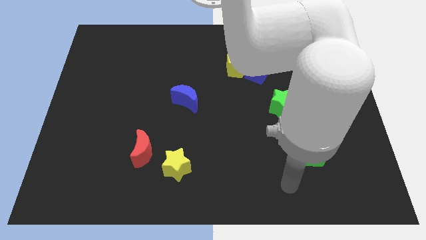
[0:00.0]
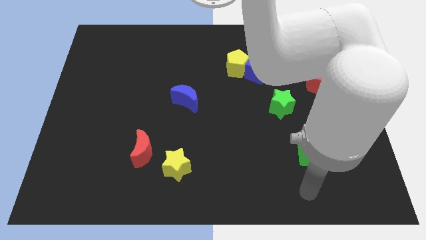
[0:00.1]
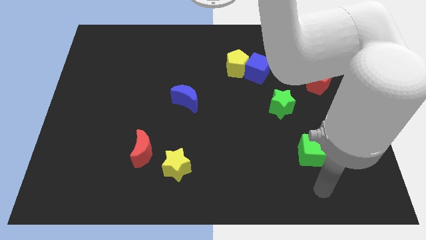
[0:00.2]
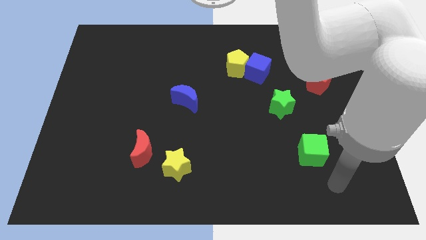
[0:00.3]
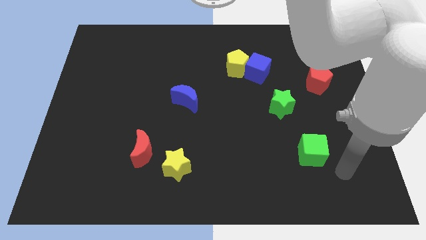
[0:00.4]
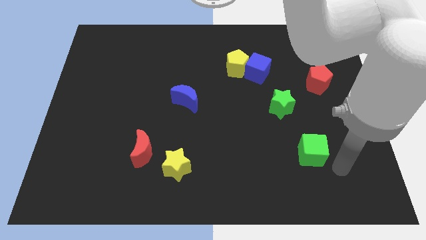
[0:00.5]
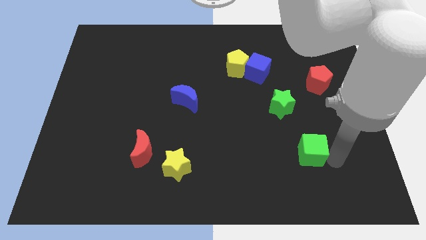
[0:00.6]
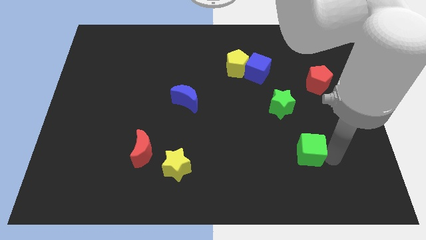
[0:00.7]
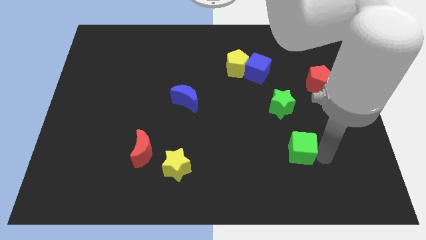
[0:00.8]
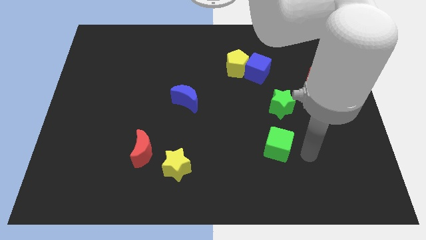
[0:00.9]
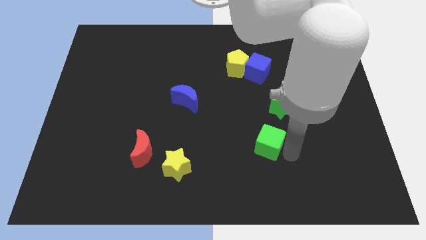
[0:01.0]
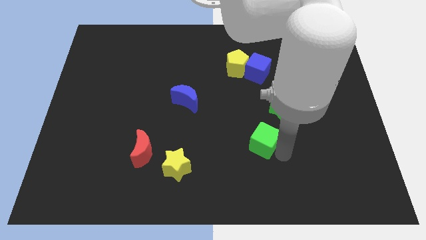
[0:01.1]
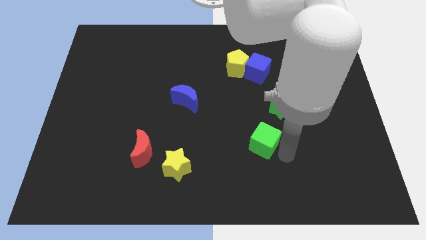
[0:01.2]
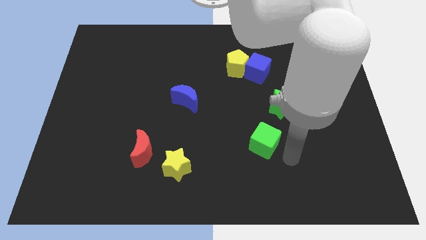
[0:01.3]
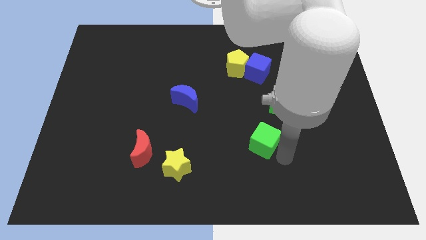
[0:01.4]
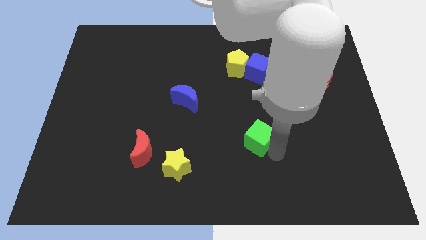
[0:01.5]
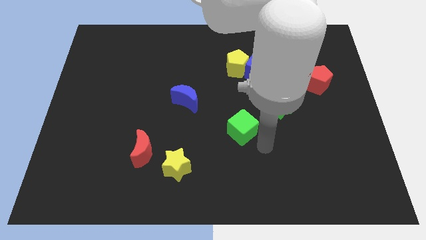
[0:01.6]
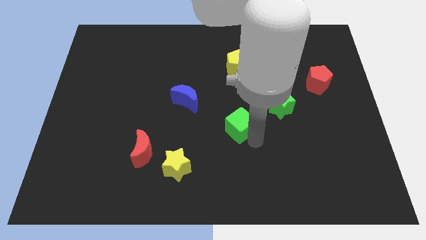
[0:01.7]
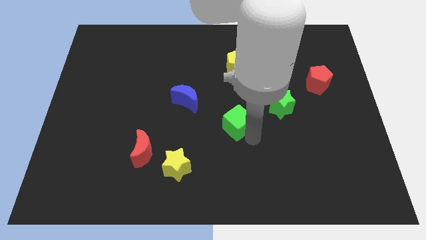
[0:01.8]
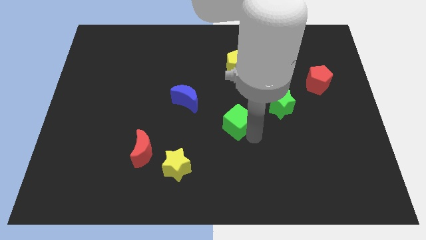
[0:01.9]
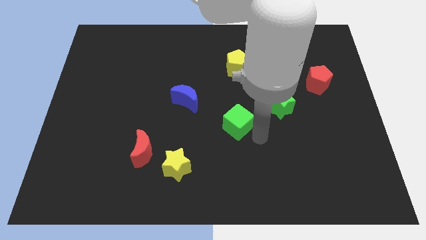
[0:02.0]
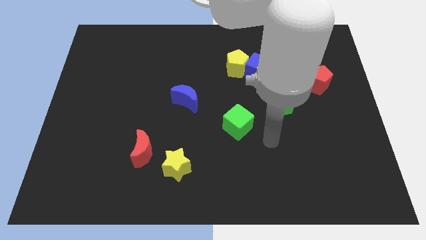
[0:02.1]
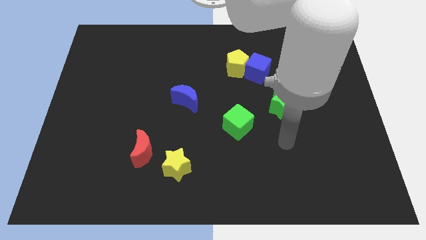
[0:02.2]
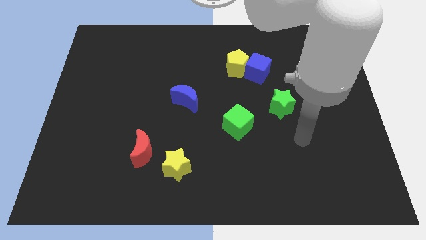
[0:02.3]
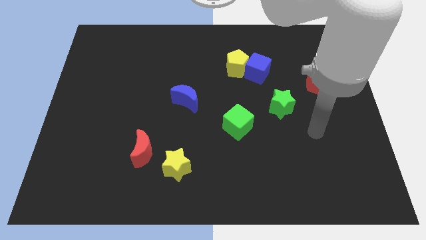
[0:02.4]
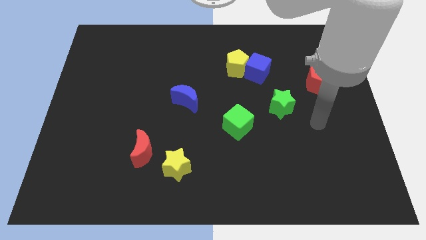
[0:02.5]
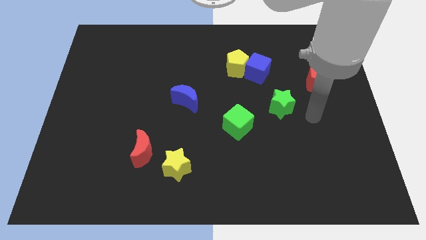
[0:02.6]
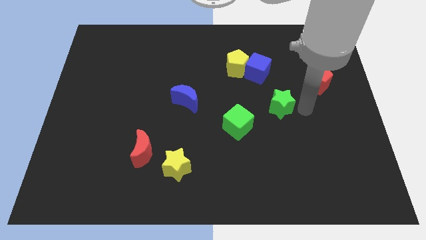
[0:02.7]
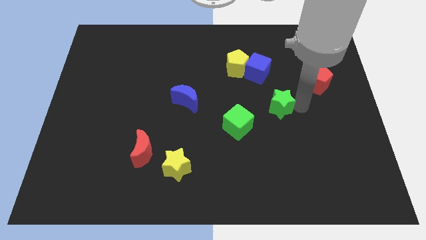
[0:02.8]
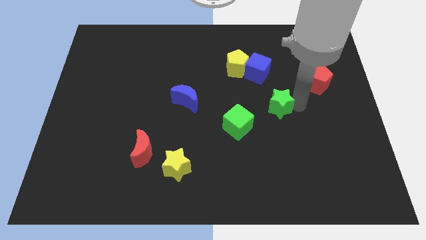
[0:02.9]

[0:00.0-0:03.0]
place the green cube at the bottom of the yellow pentagon

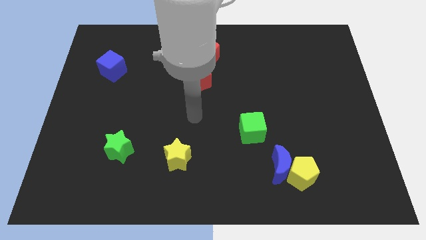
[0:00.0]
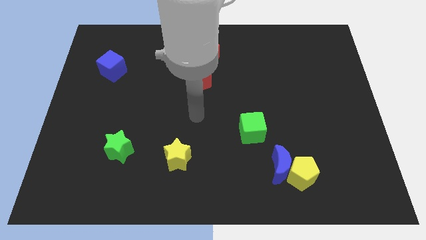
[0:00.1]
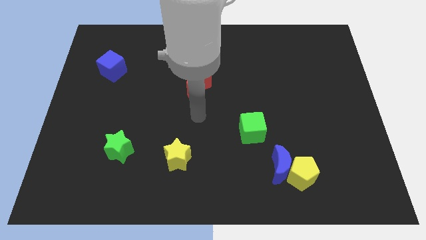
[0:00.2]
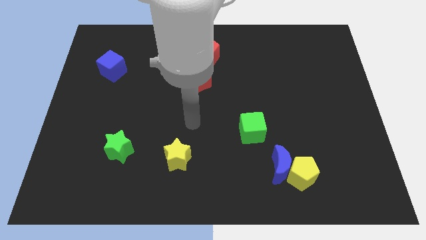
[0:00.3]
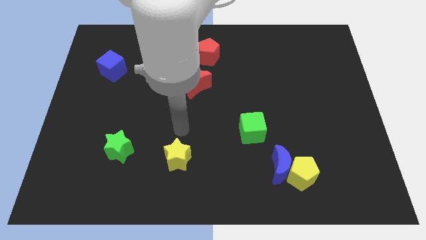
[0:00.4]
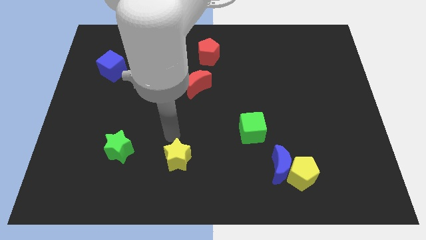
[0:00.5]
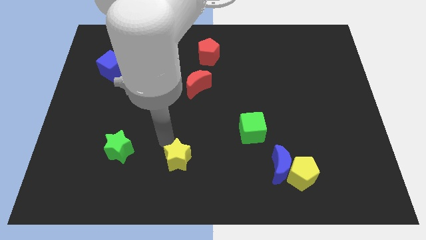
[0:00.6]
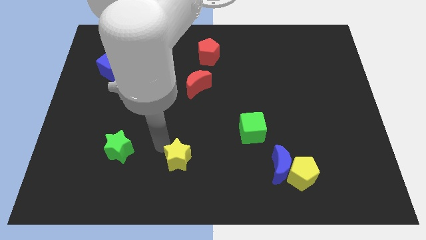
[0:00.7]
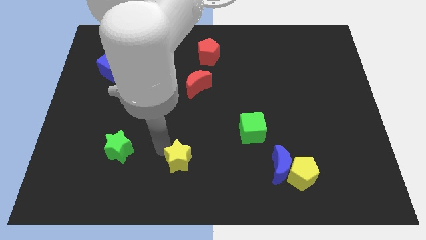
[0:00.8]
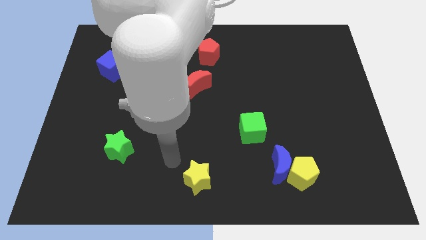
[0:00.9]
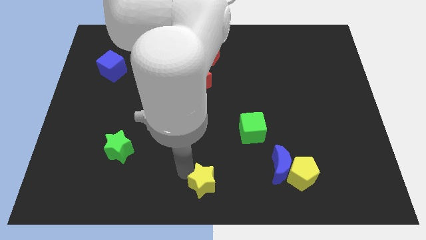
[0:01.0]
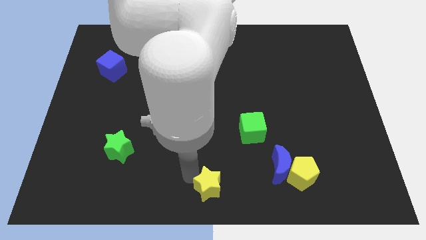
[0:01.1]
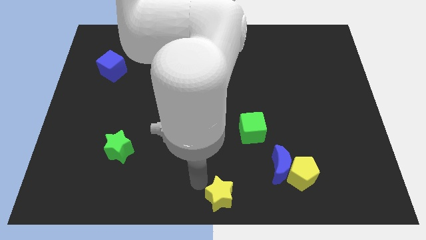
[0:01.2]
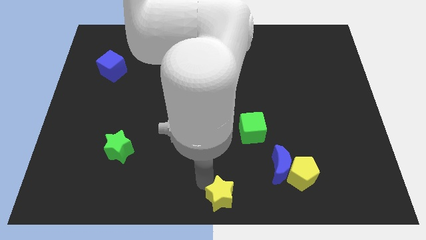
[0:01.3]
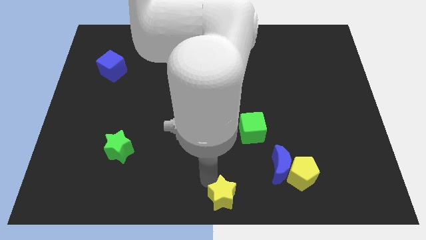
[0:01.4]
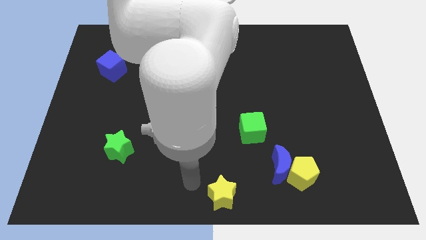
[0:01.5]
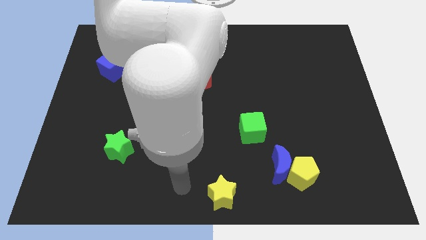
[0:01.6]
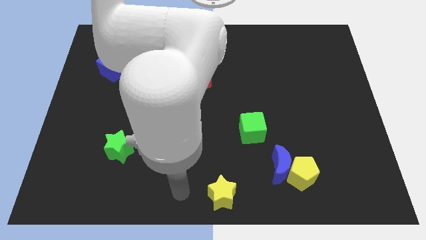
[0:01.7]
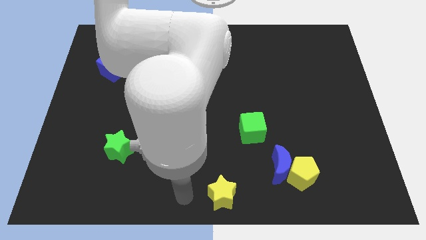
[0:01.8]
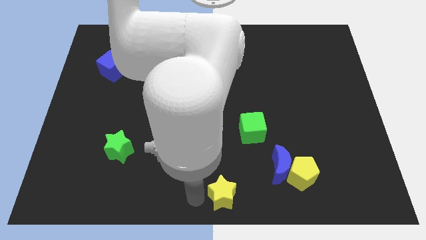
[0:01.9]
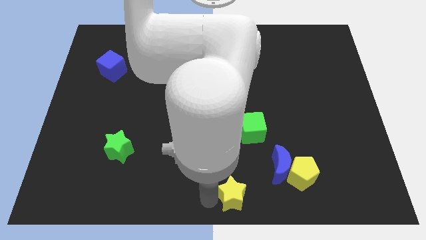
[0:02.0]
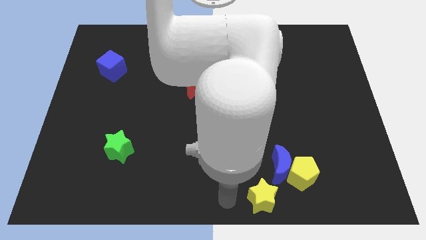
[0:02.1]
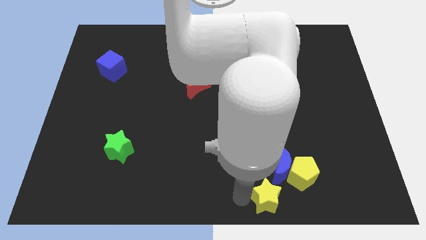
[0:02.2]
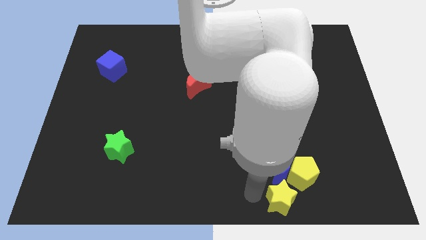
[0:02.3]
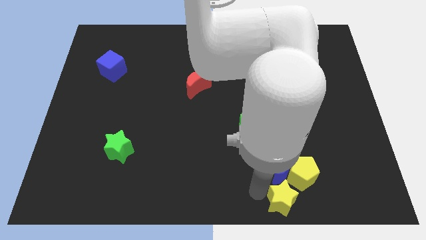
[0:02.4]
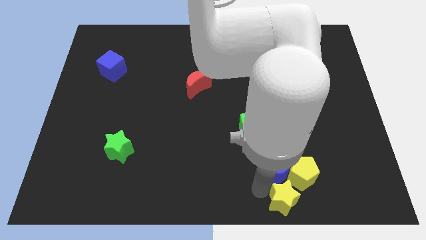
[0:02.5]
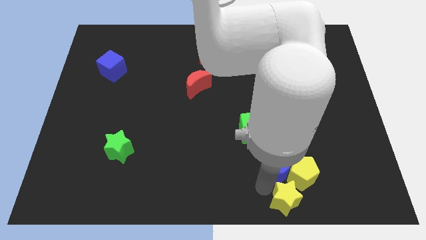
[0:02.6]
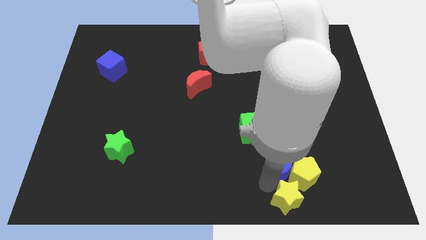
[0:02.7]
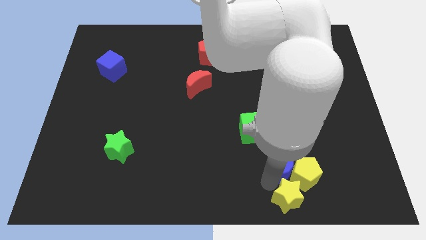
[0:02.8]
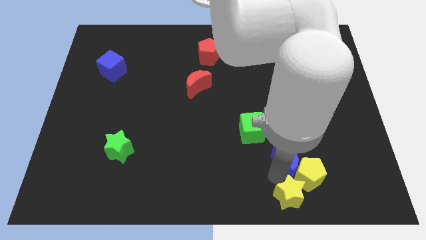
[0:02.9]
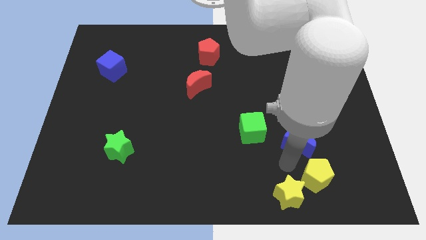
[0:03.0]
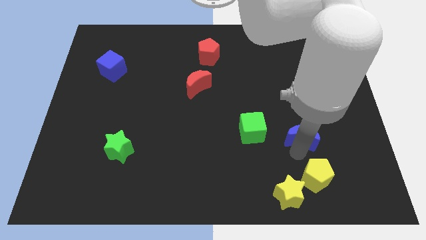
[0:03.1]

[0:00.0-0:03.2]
push the yellow star into the yellow pentagon

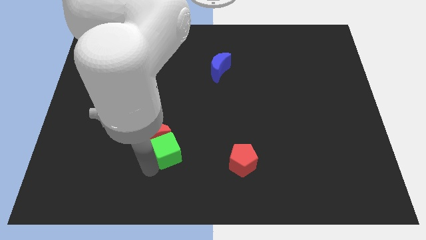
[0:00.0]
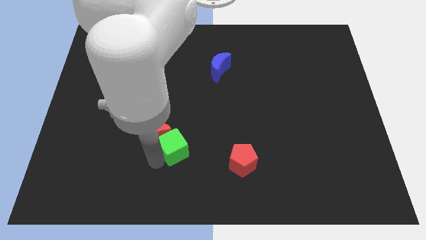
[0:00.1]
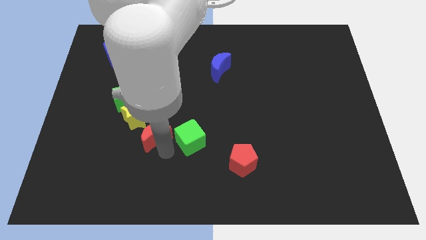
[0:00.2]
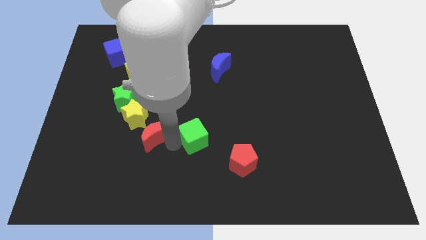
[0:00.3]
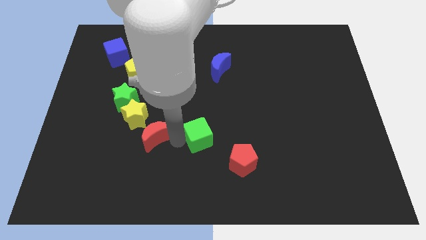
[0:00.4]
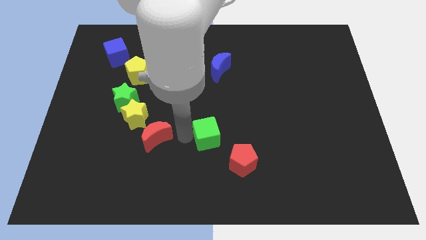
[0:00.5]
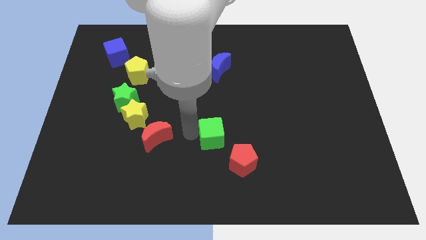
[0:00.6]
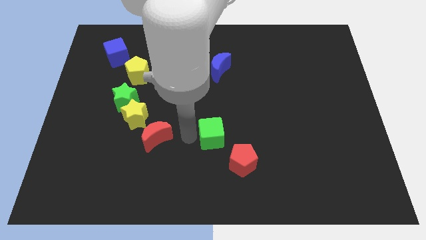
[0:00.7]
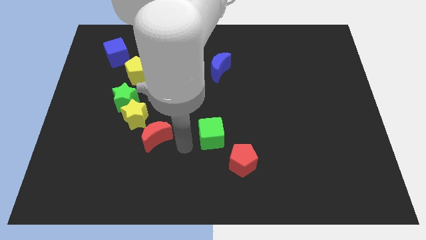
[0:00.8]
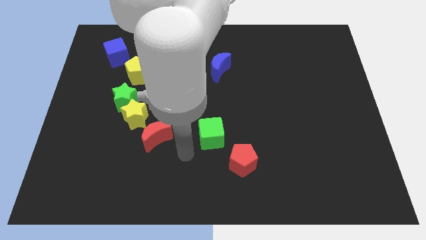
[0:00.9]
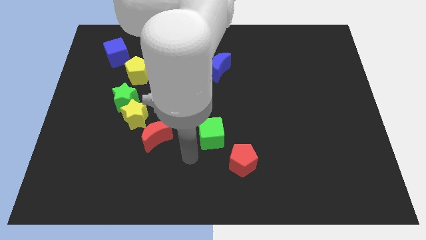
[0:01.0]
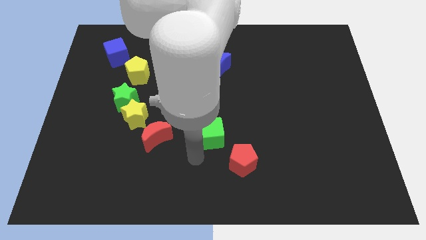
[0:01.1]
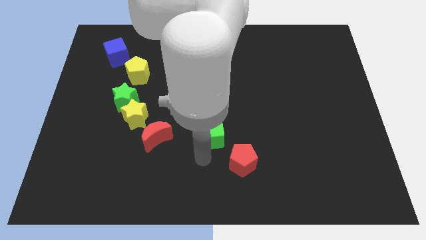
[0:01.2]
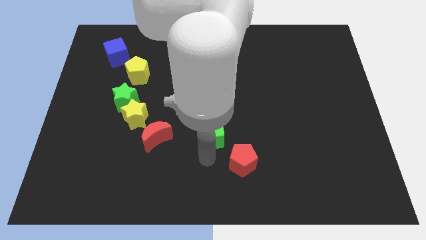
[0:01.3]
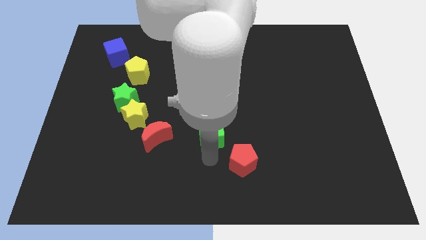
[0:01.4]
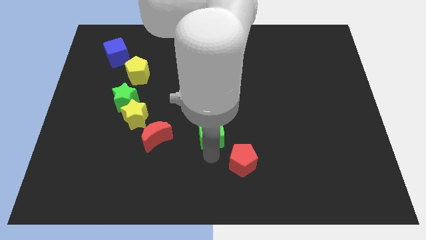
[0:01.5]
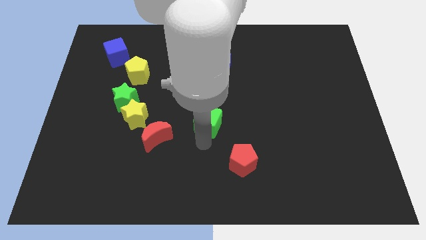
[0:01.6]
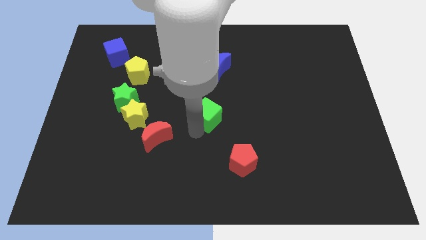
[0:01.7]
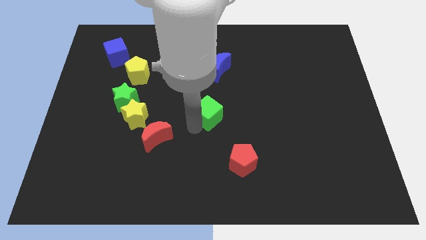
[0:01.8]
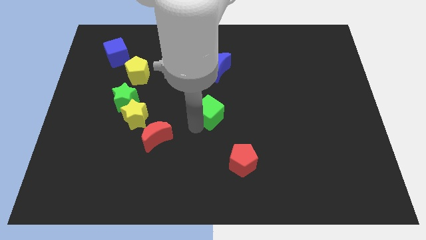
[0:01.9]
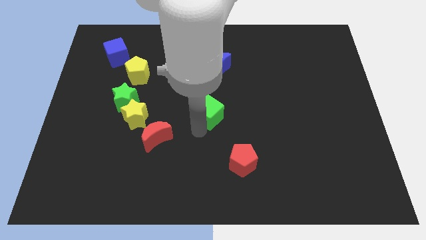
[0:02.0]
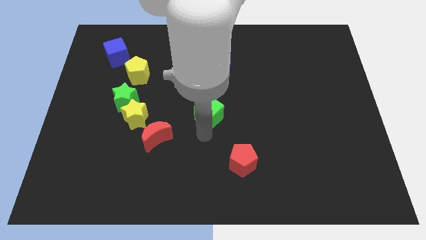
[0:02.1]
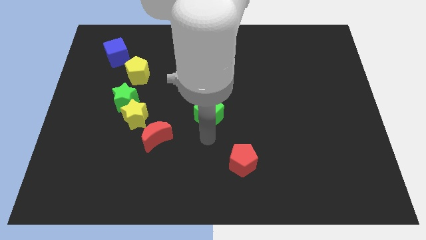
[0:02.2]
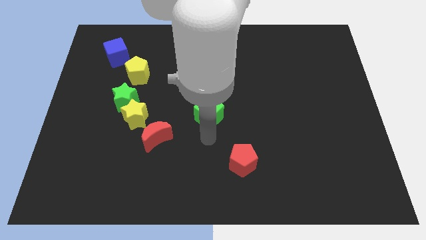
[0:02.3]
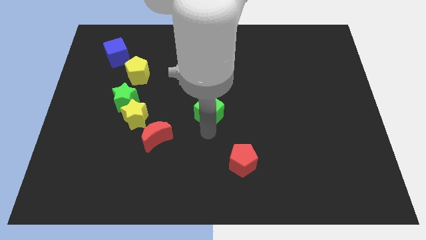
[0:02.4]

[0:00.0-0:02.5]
push the green cube upwards

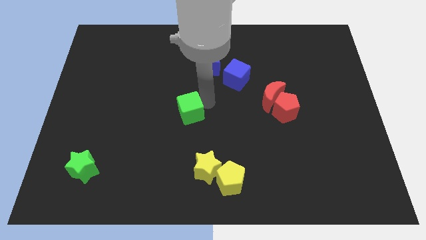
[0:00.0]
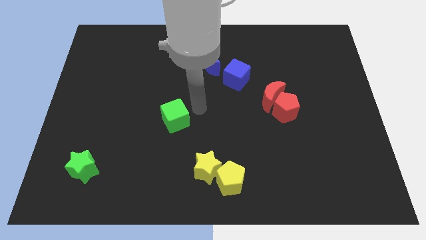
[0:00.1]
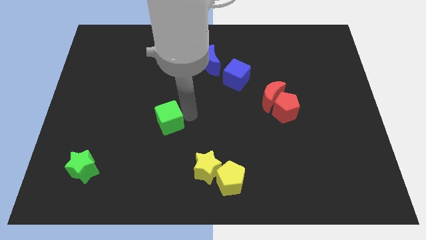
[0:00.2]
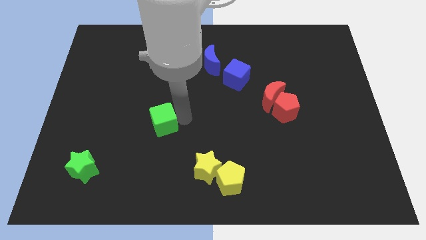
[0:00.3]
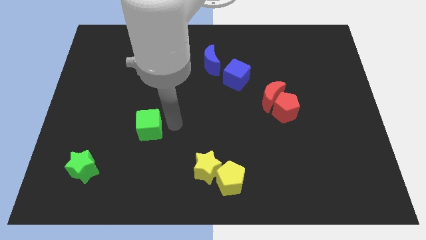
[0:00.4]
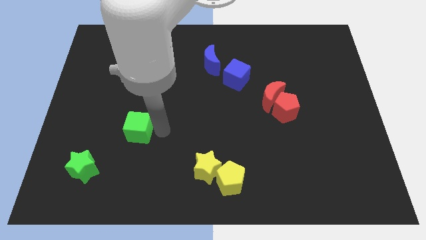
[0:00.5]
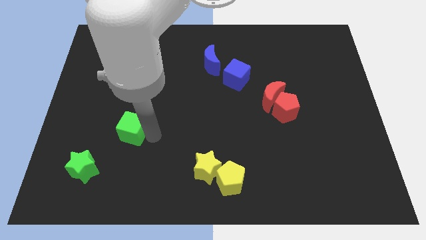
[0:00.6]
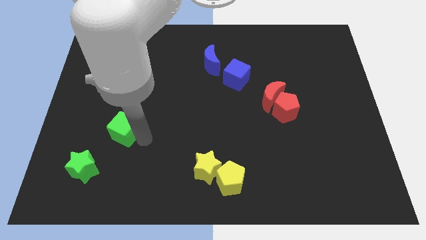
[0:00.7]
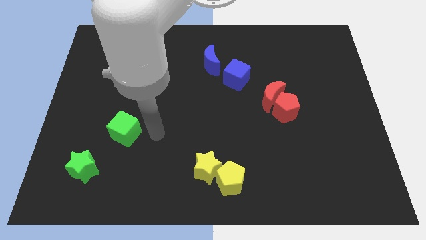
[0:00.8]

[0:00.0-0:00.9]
push the green cube towards the green star
